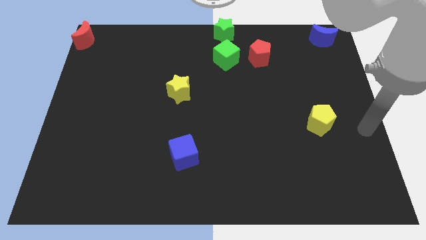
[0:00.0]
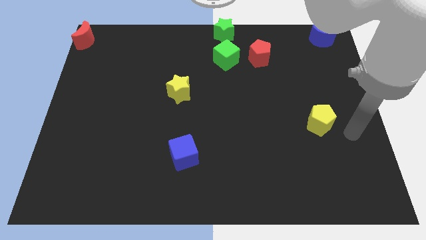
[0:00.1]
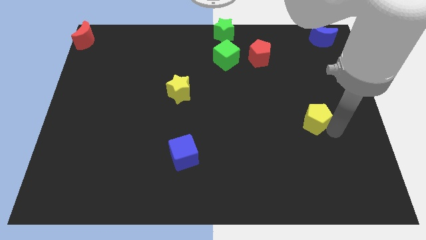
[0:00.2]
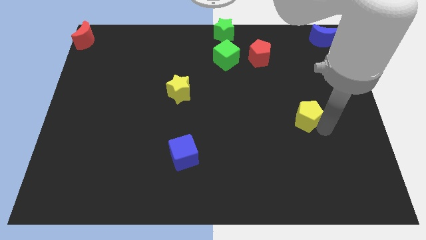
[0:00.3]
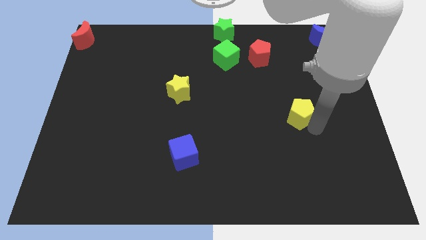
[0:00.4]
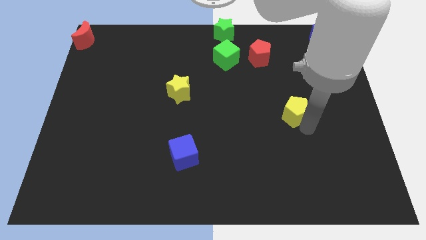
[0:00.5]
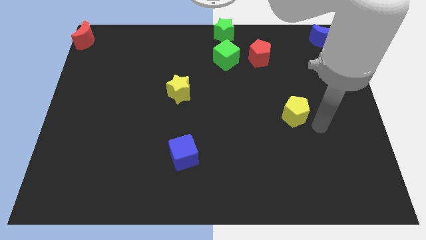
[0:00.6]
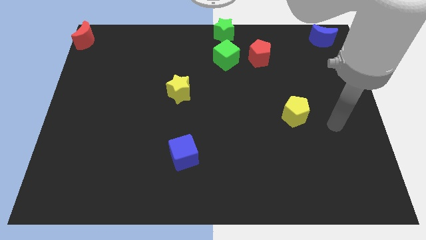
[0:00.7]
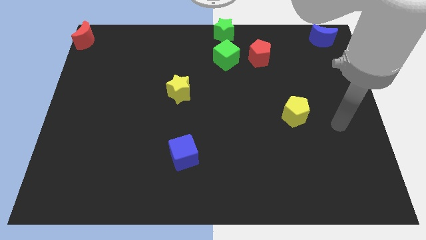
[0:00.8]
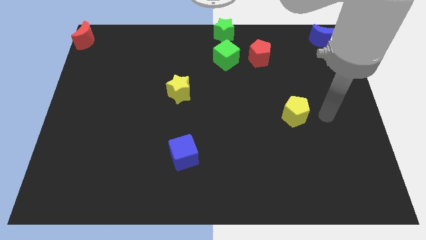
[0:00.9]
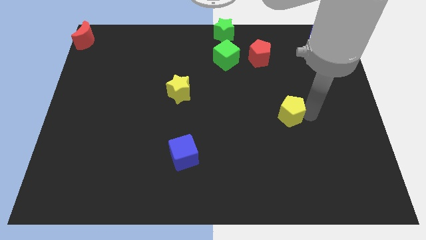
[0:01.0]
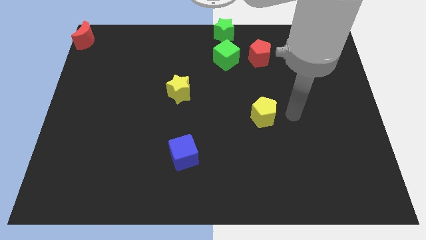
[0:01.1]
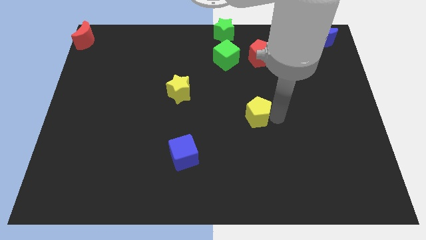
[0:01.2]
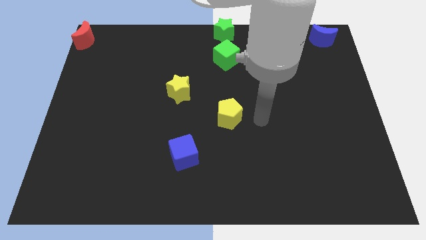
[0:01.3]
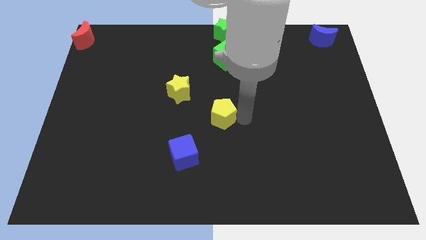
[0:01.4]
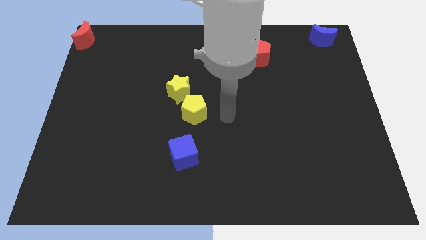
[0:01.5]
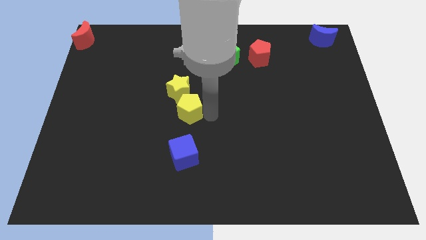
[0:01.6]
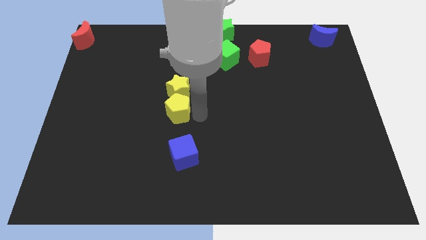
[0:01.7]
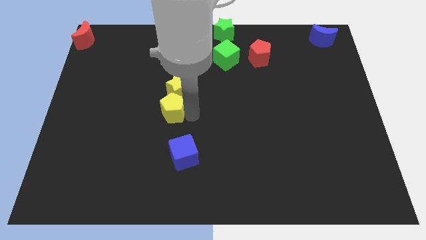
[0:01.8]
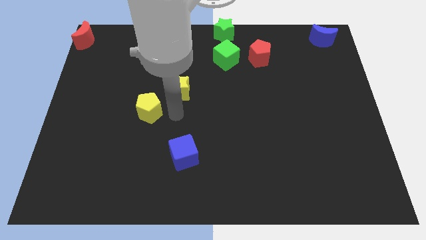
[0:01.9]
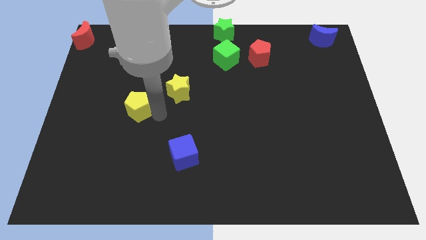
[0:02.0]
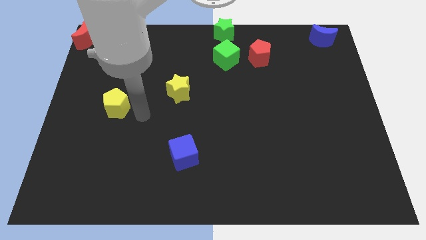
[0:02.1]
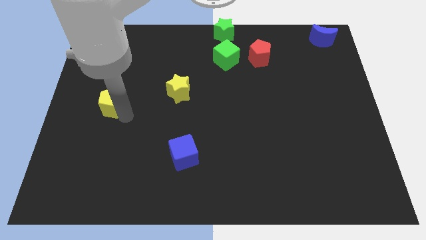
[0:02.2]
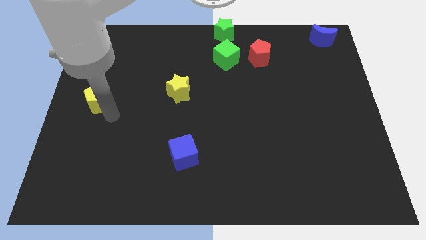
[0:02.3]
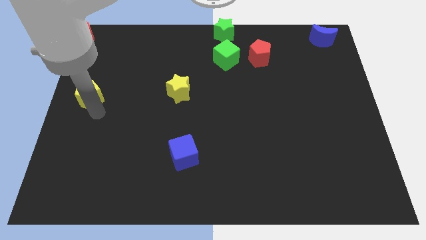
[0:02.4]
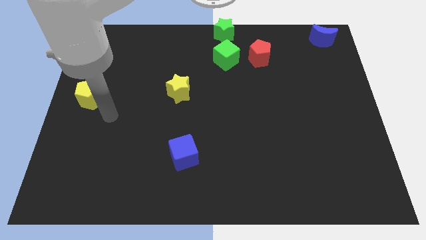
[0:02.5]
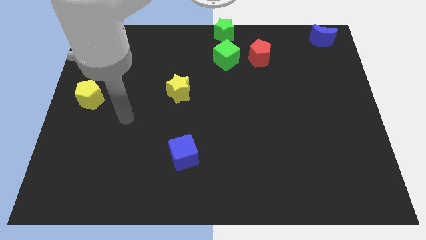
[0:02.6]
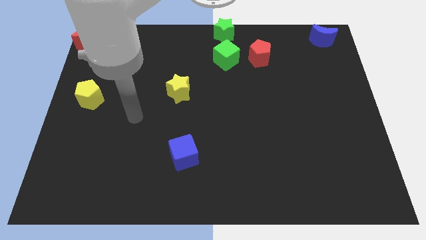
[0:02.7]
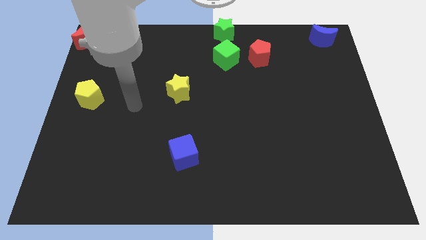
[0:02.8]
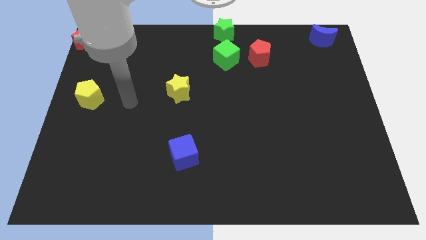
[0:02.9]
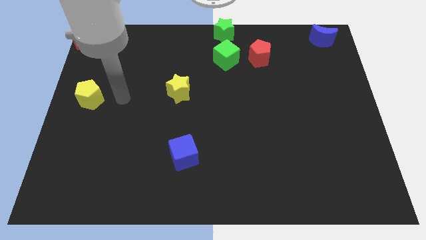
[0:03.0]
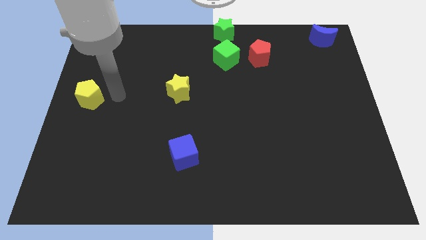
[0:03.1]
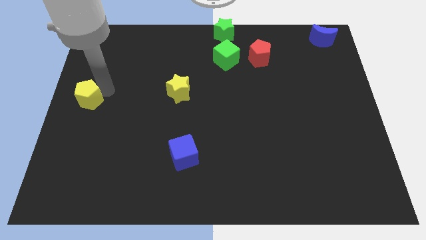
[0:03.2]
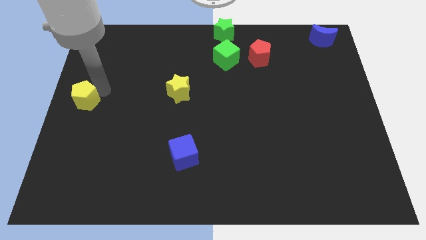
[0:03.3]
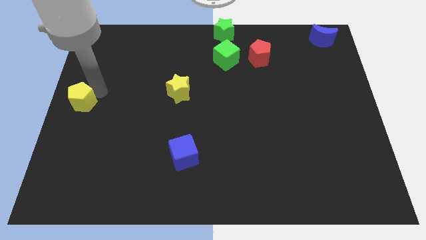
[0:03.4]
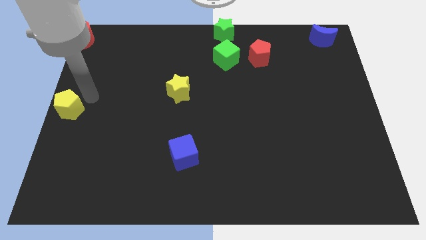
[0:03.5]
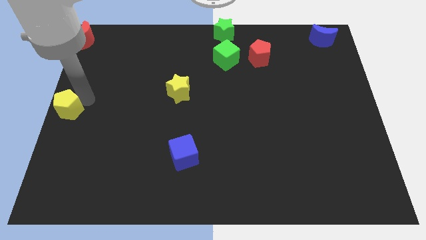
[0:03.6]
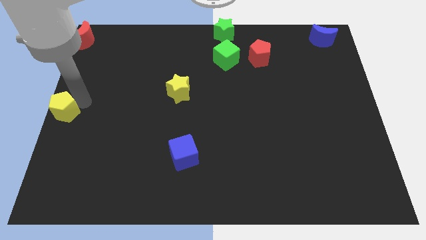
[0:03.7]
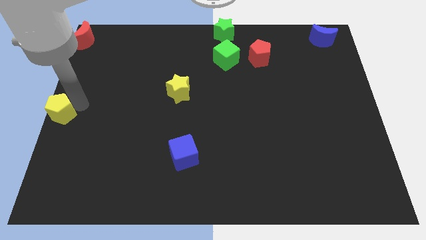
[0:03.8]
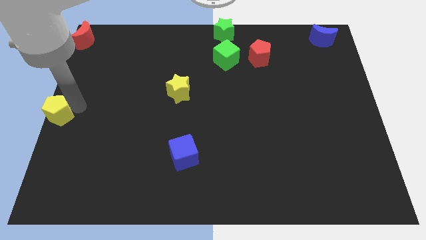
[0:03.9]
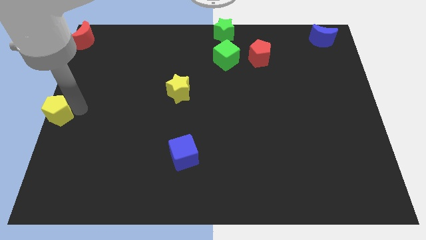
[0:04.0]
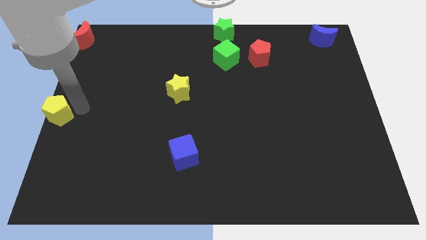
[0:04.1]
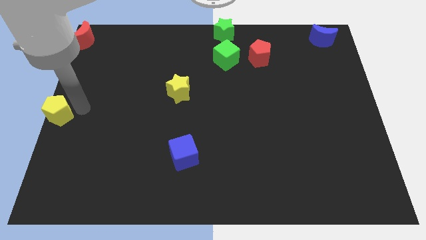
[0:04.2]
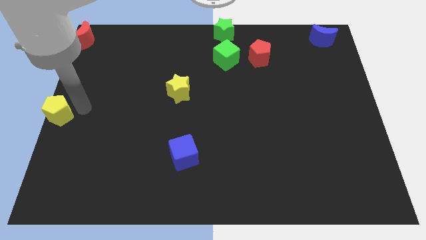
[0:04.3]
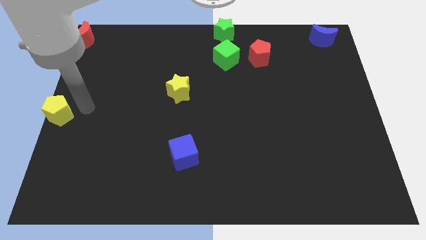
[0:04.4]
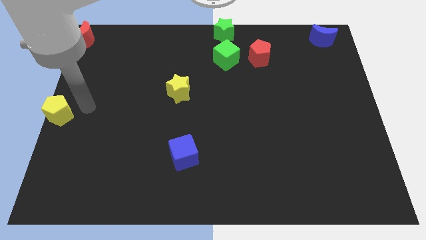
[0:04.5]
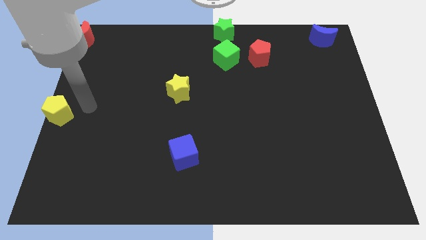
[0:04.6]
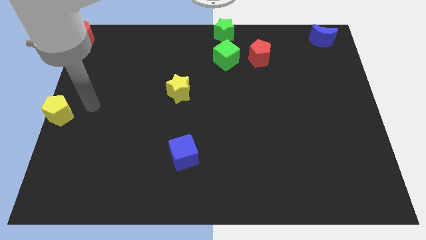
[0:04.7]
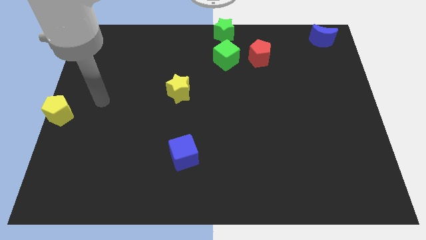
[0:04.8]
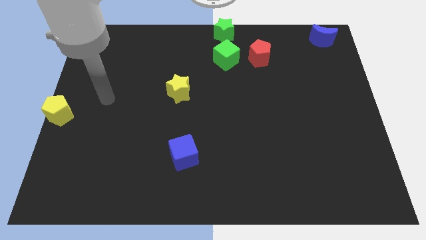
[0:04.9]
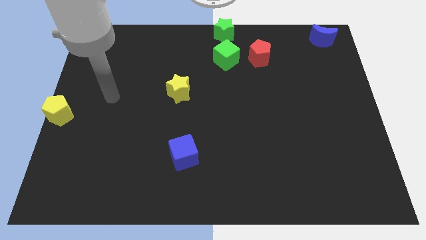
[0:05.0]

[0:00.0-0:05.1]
move the yellow pentagon towards the left center

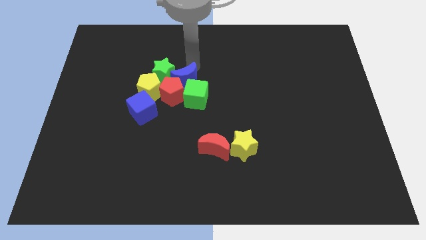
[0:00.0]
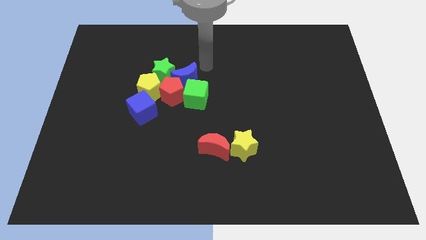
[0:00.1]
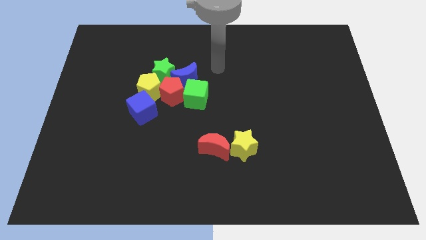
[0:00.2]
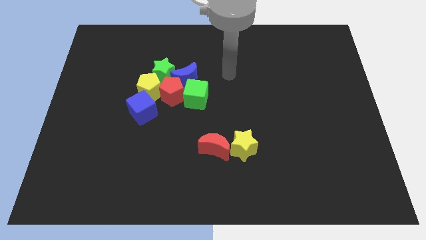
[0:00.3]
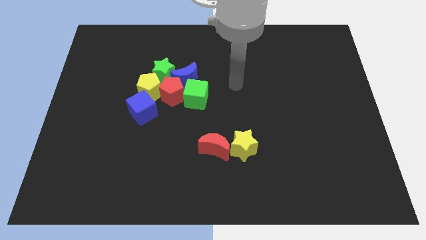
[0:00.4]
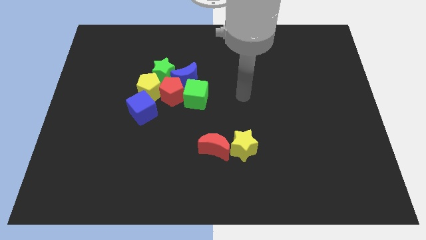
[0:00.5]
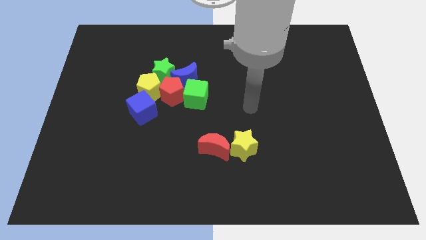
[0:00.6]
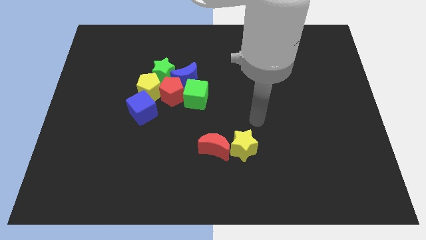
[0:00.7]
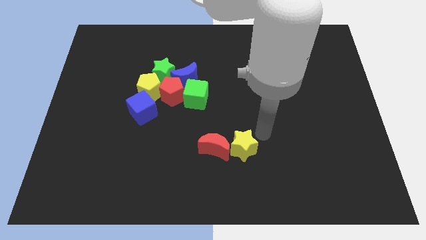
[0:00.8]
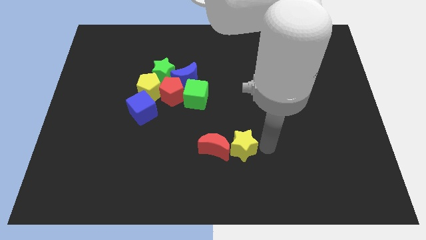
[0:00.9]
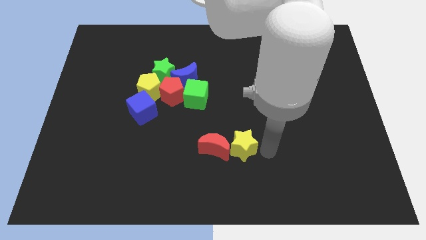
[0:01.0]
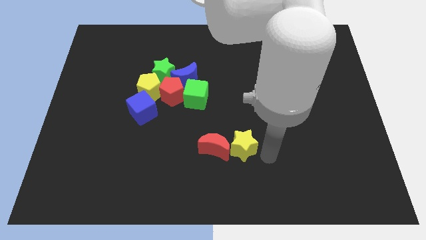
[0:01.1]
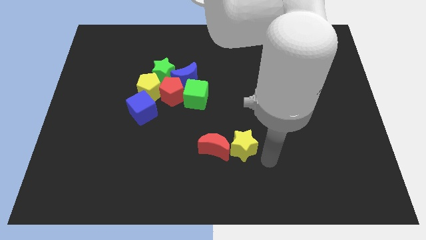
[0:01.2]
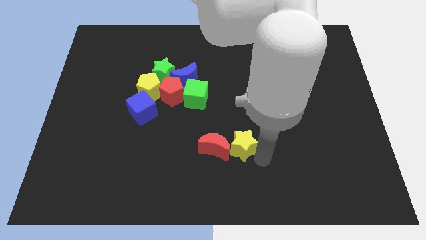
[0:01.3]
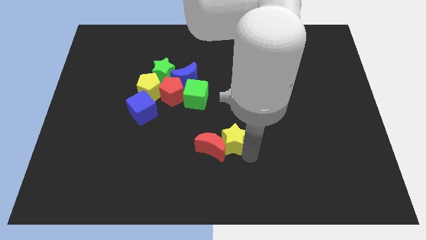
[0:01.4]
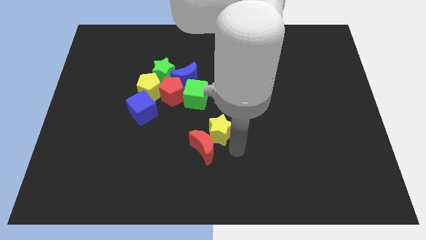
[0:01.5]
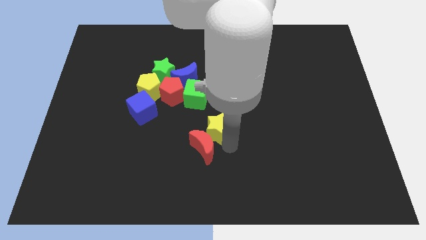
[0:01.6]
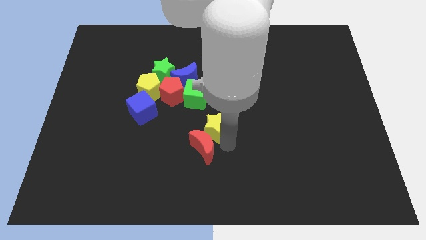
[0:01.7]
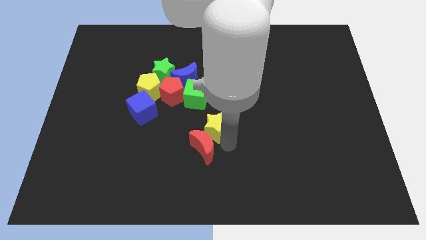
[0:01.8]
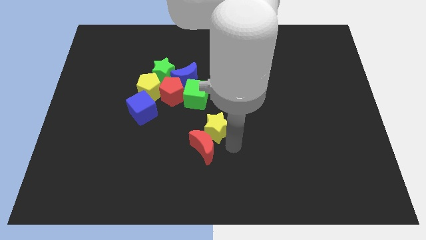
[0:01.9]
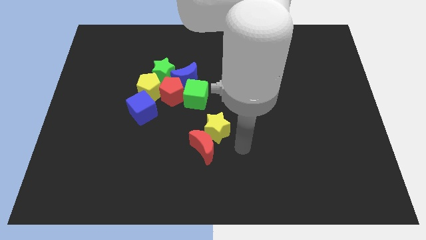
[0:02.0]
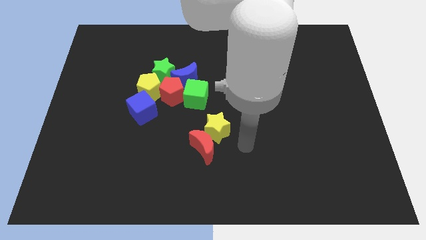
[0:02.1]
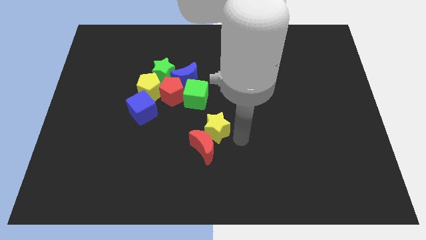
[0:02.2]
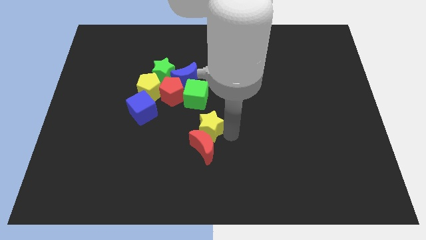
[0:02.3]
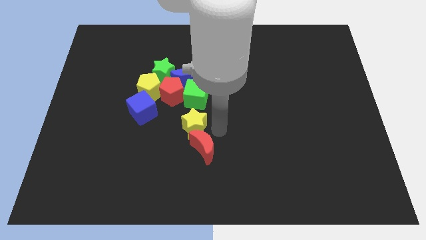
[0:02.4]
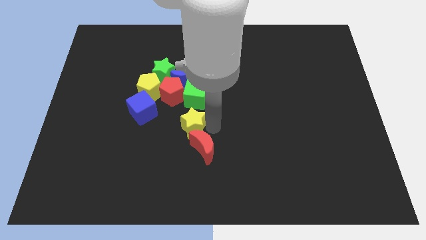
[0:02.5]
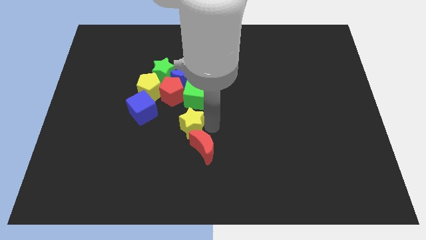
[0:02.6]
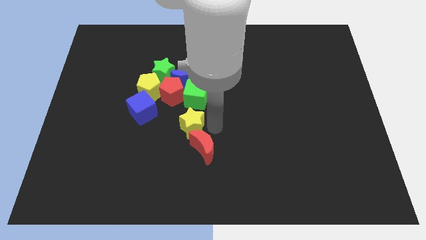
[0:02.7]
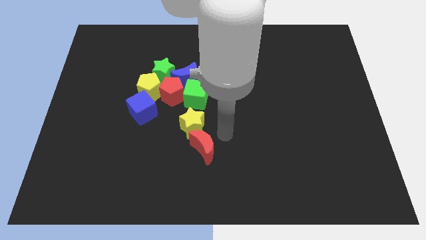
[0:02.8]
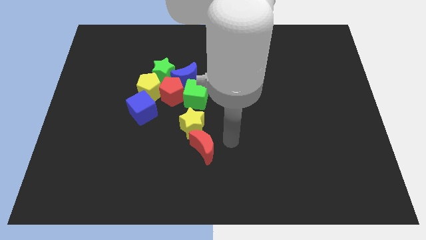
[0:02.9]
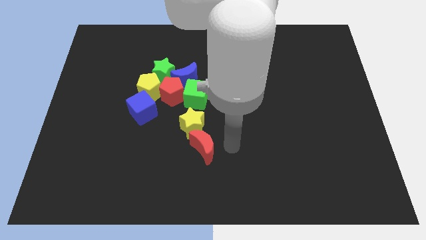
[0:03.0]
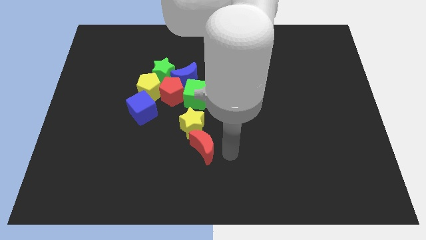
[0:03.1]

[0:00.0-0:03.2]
place the yellow star above the red crescent

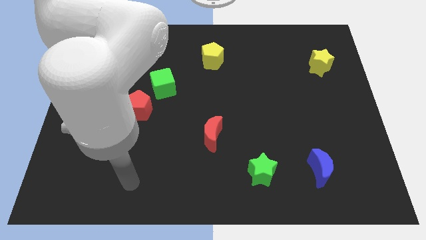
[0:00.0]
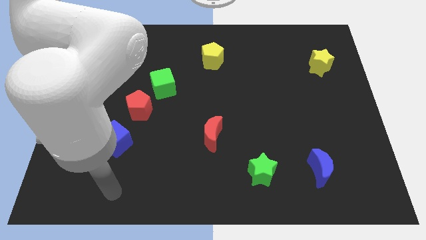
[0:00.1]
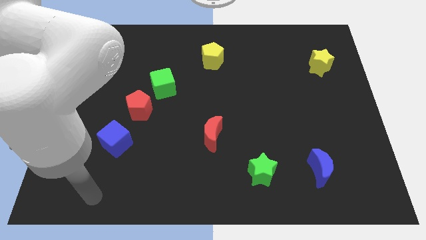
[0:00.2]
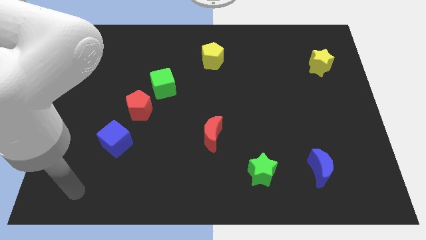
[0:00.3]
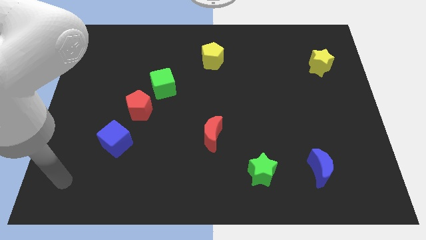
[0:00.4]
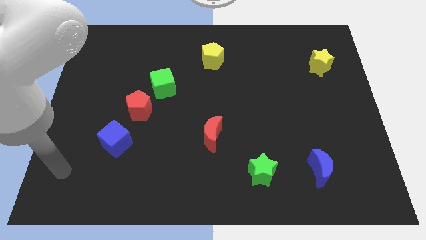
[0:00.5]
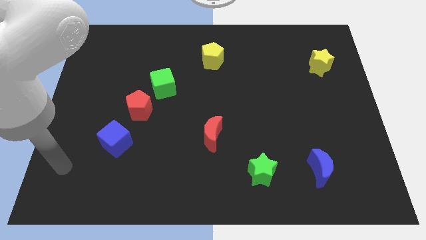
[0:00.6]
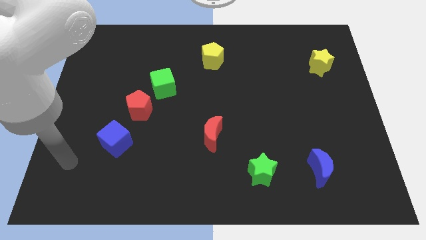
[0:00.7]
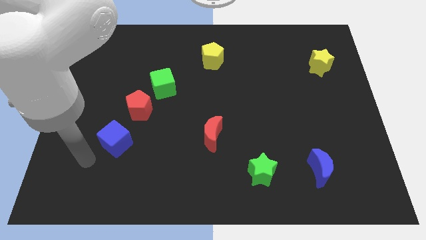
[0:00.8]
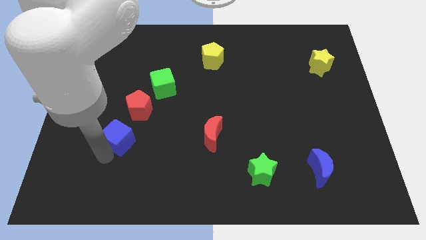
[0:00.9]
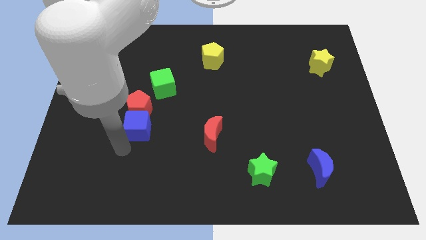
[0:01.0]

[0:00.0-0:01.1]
push the blue cube into the bottom side of the red pentagon
